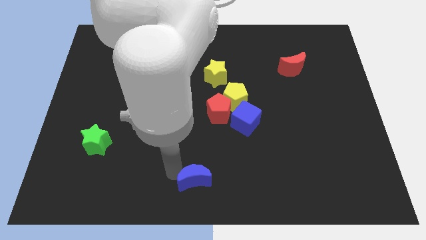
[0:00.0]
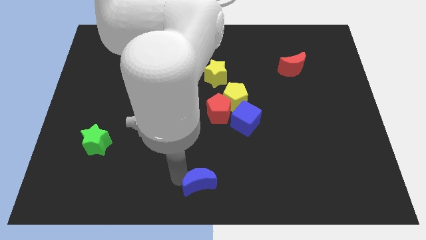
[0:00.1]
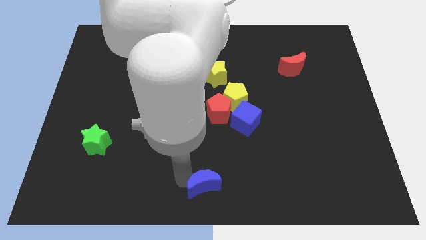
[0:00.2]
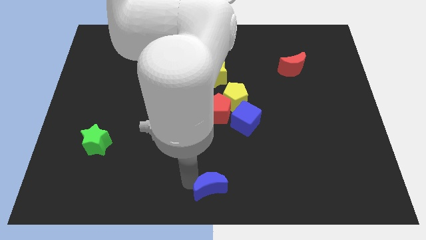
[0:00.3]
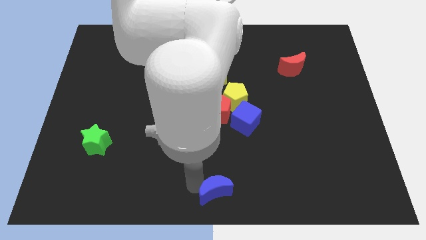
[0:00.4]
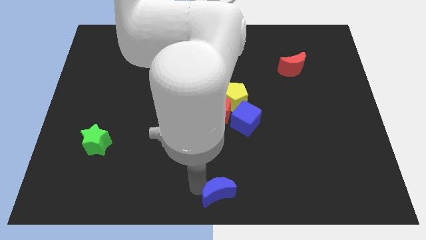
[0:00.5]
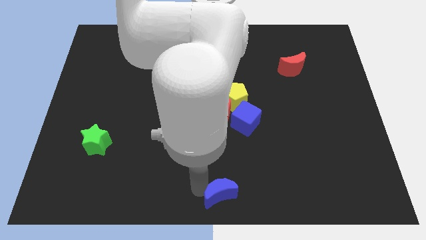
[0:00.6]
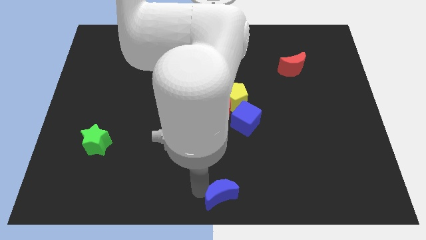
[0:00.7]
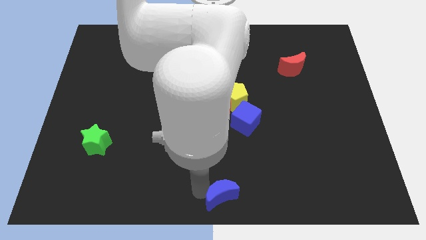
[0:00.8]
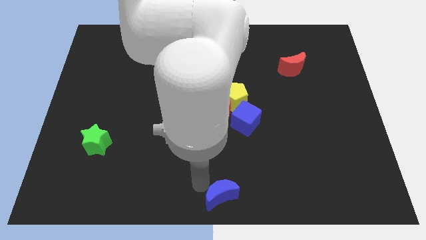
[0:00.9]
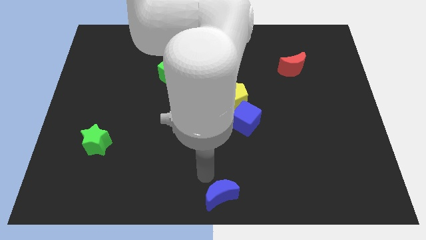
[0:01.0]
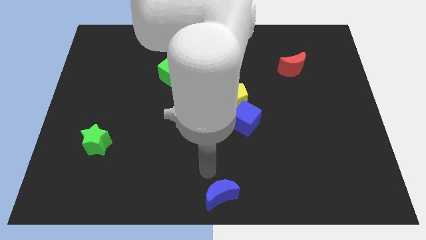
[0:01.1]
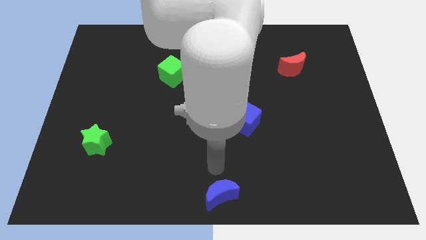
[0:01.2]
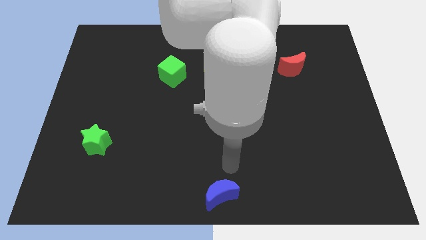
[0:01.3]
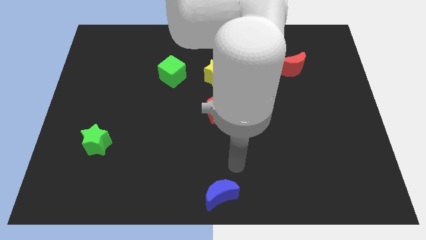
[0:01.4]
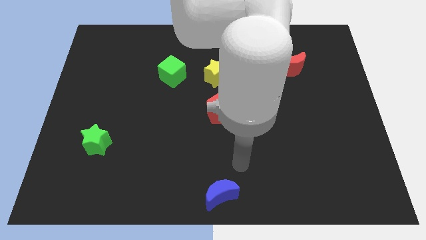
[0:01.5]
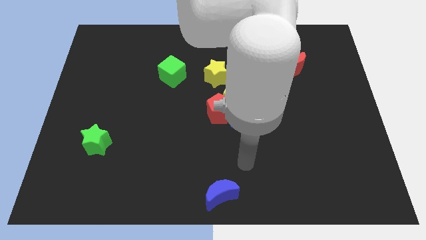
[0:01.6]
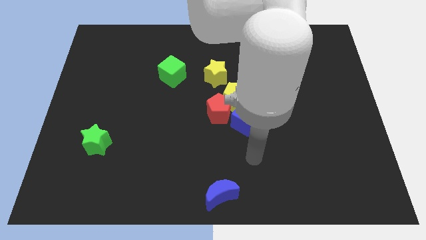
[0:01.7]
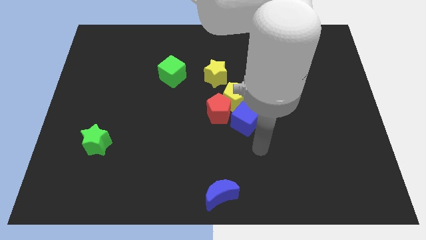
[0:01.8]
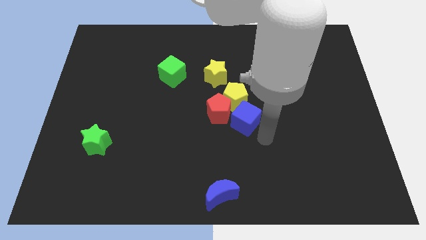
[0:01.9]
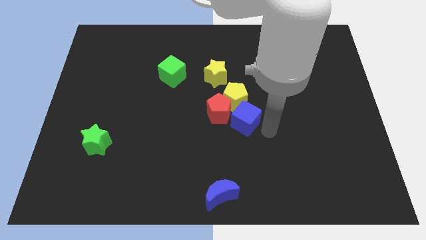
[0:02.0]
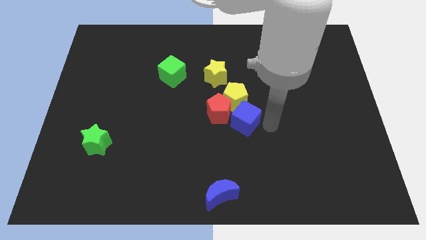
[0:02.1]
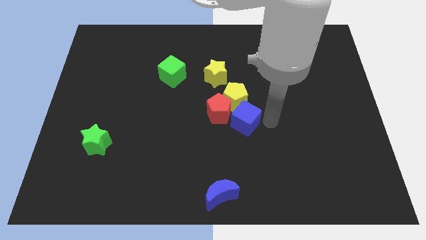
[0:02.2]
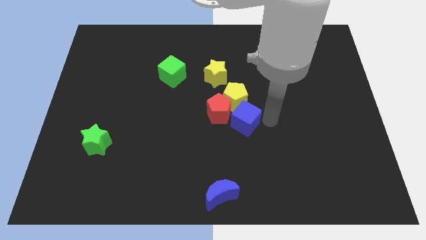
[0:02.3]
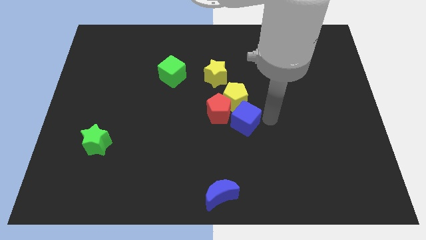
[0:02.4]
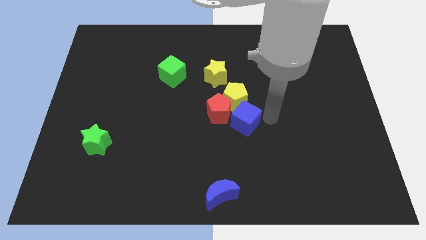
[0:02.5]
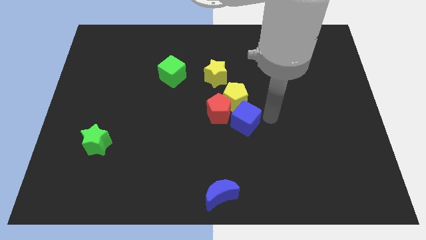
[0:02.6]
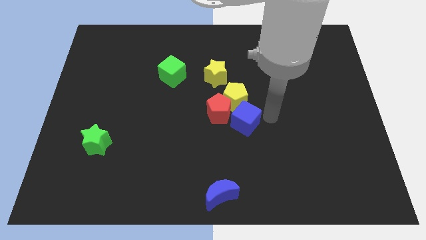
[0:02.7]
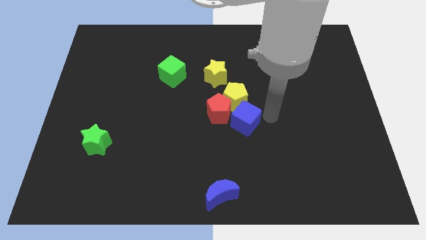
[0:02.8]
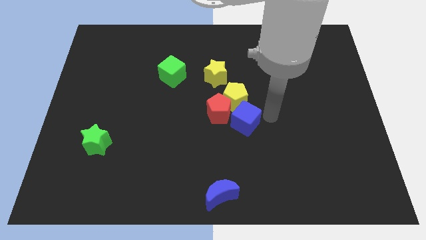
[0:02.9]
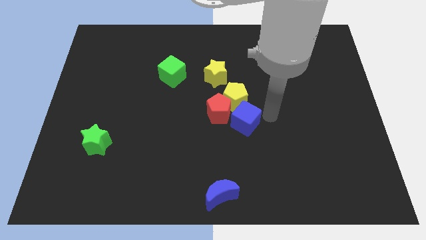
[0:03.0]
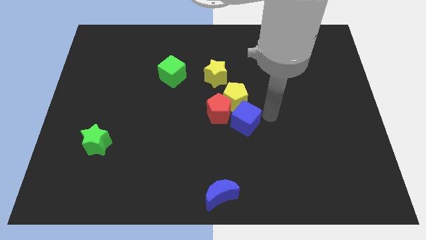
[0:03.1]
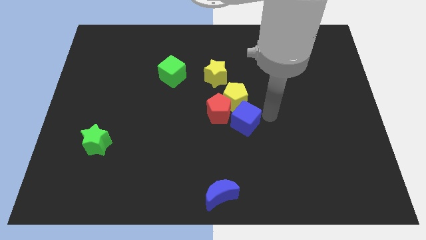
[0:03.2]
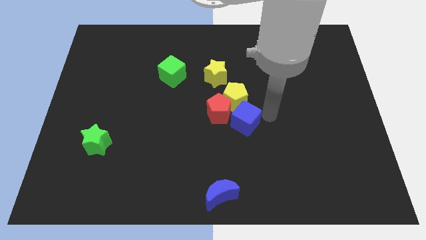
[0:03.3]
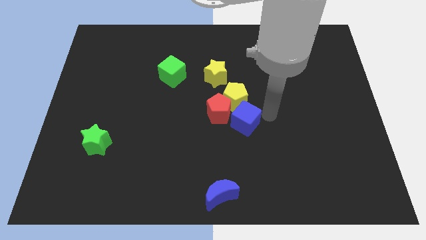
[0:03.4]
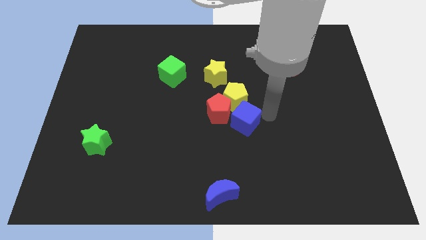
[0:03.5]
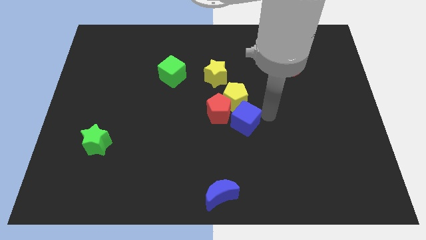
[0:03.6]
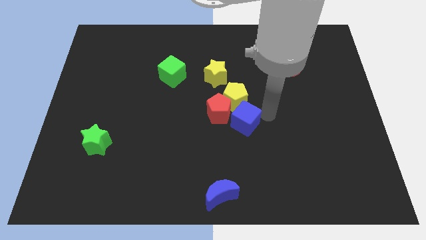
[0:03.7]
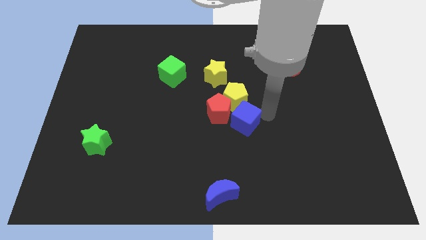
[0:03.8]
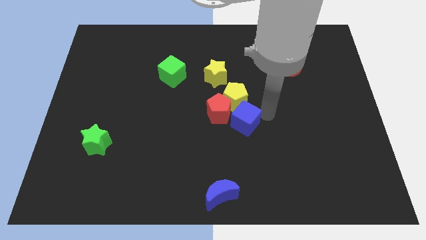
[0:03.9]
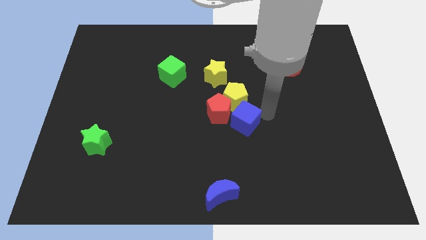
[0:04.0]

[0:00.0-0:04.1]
place the blue moon to bottom center

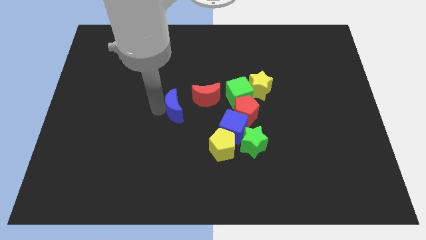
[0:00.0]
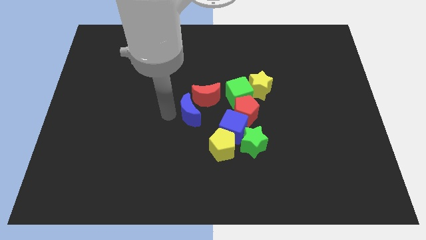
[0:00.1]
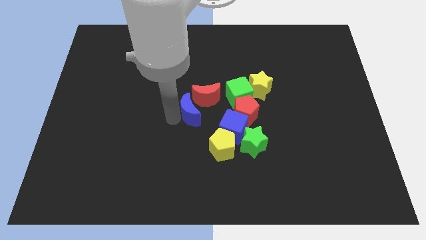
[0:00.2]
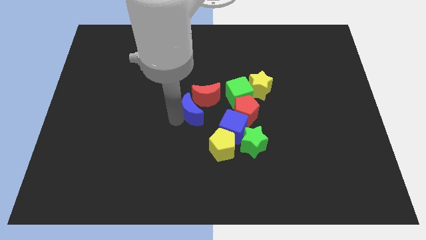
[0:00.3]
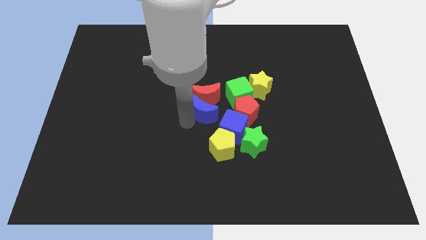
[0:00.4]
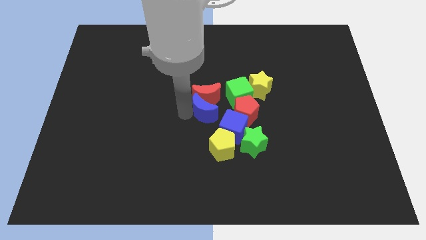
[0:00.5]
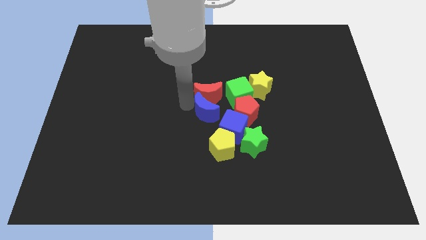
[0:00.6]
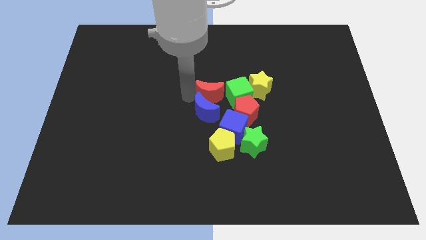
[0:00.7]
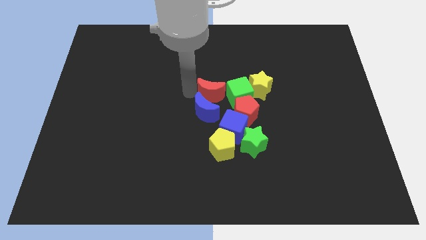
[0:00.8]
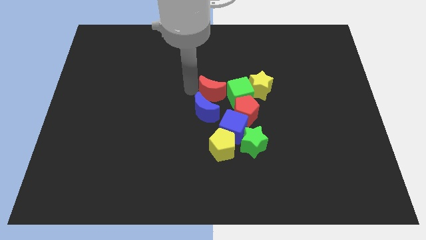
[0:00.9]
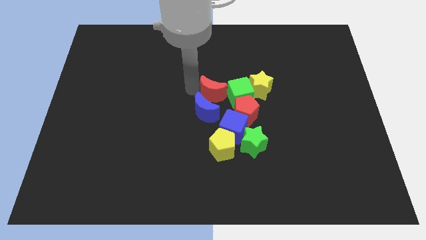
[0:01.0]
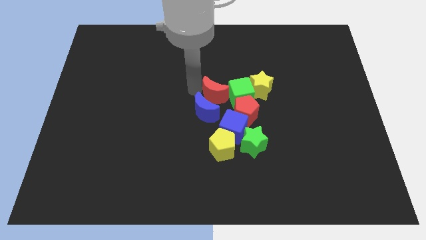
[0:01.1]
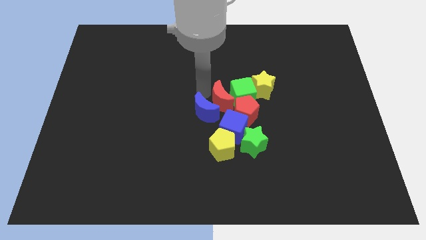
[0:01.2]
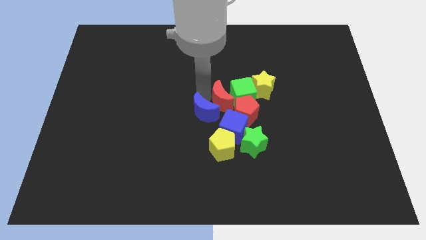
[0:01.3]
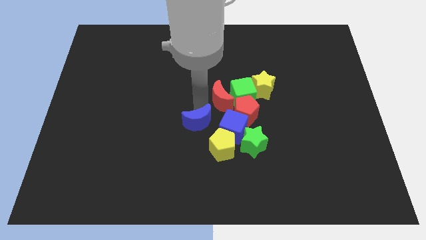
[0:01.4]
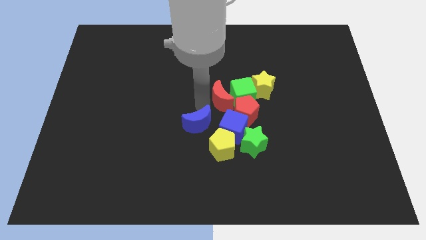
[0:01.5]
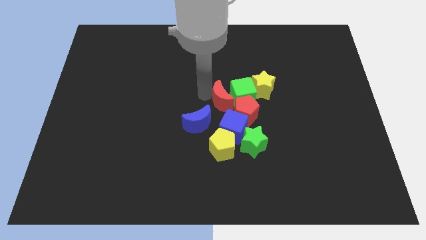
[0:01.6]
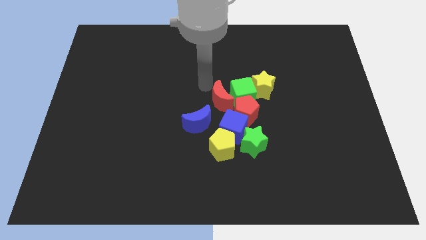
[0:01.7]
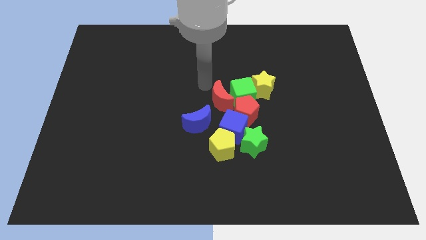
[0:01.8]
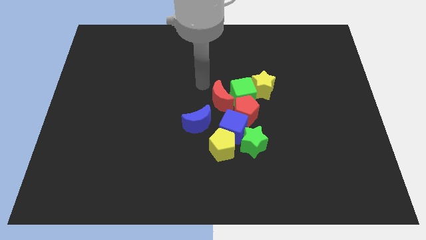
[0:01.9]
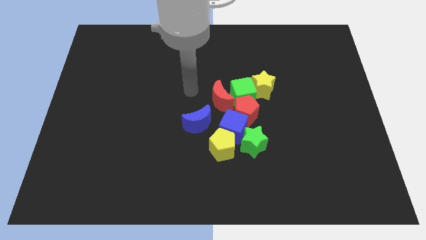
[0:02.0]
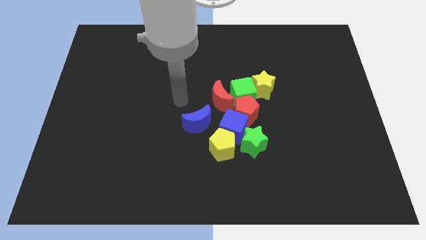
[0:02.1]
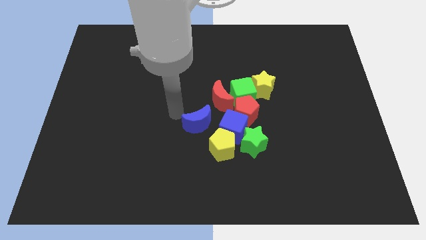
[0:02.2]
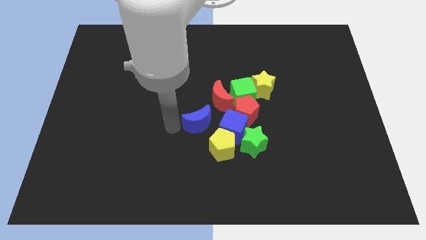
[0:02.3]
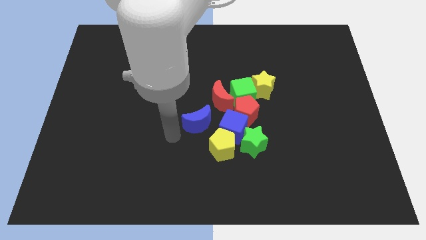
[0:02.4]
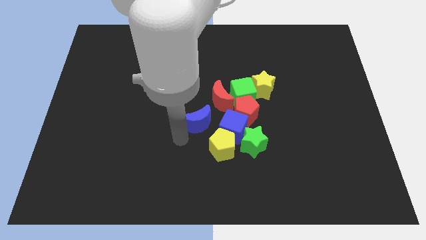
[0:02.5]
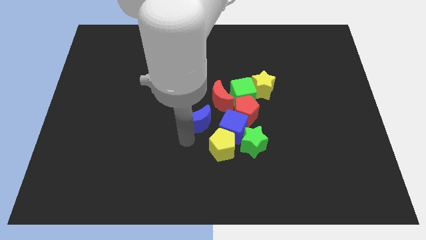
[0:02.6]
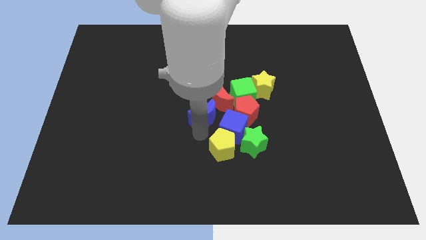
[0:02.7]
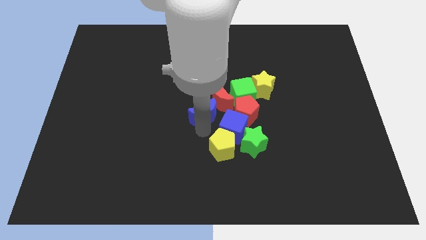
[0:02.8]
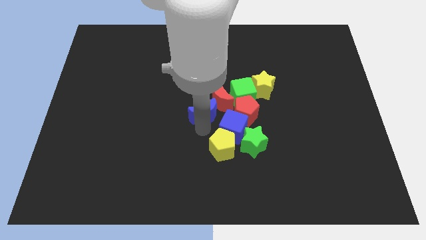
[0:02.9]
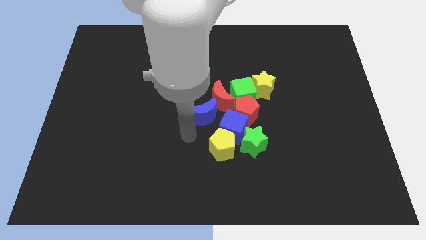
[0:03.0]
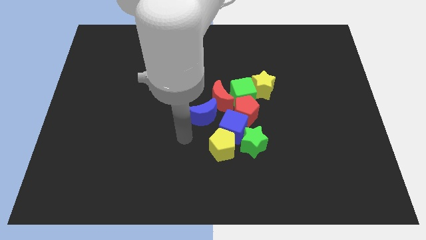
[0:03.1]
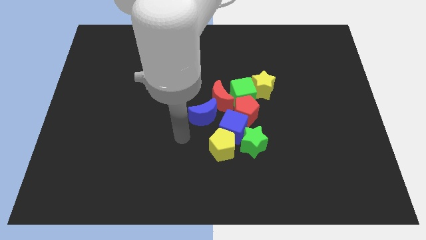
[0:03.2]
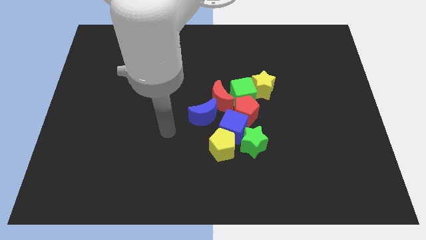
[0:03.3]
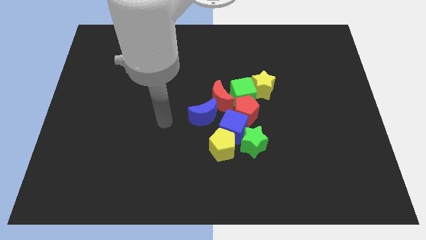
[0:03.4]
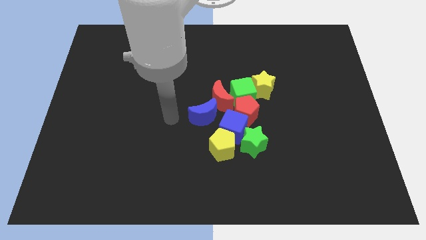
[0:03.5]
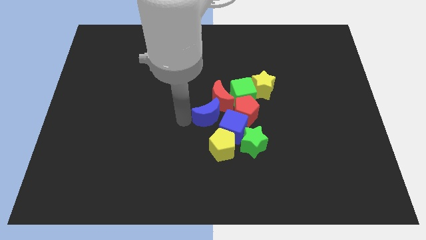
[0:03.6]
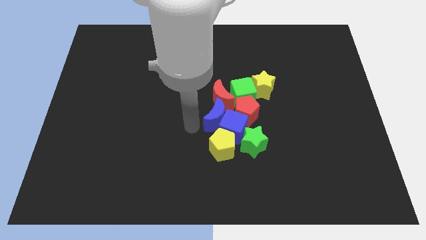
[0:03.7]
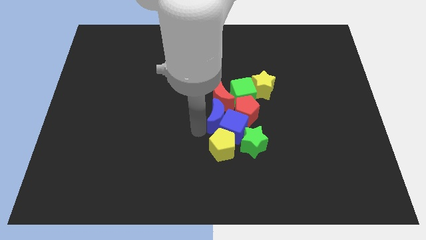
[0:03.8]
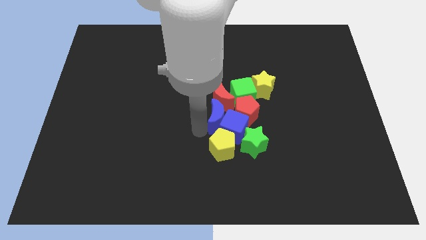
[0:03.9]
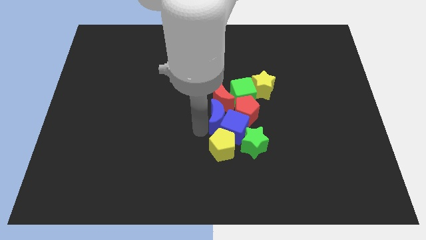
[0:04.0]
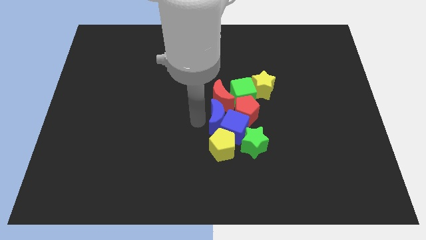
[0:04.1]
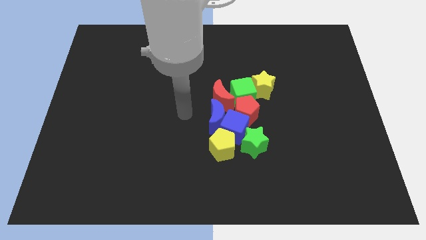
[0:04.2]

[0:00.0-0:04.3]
push the blue crescent and the red moon into the group of blocks

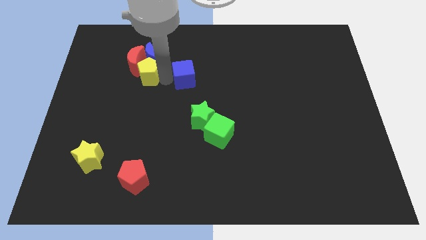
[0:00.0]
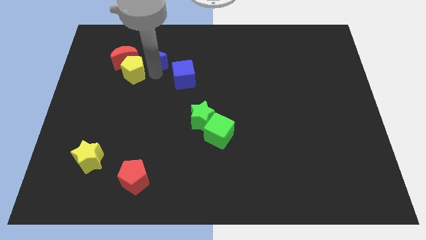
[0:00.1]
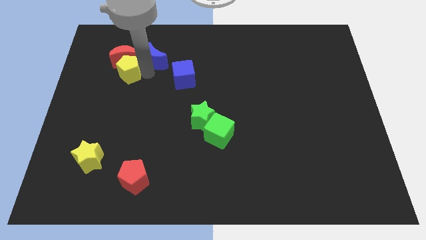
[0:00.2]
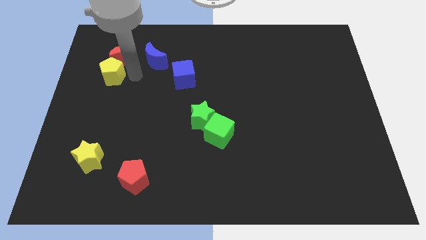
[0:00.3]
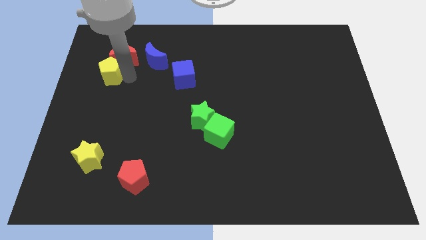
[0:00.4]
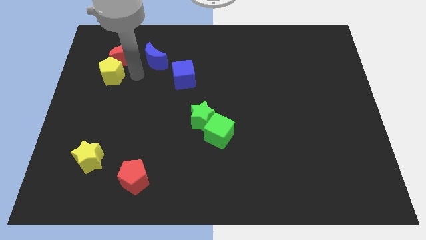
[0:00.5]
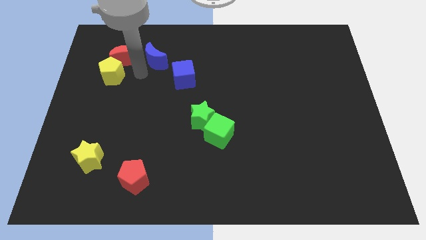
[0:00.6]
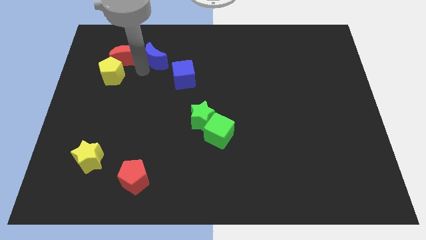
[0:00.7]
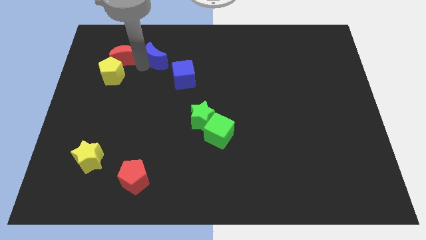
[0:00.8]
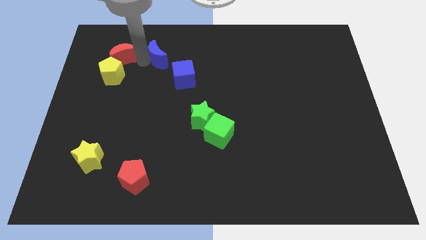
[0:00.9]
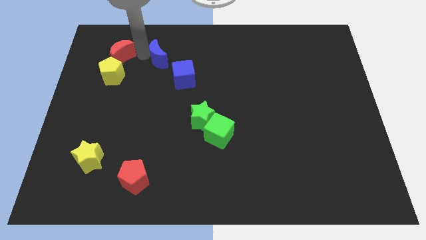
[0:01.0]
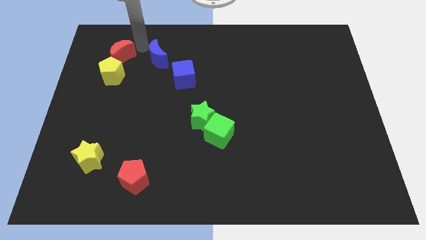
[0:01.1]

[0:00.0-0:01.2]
slide the yellow pentagon slightly to the left of the board
